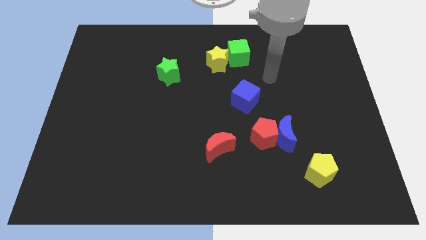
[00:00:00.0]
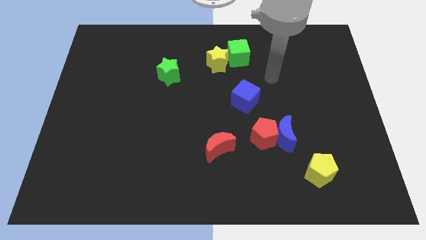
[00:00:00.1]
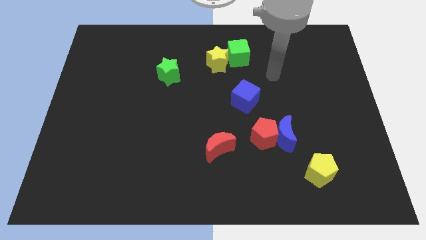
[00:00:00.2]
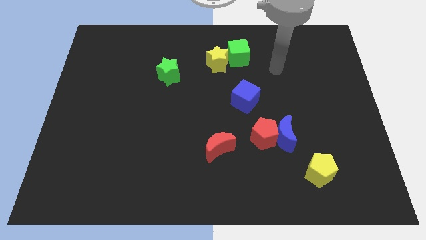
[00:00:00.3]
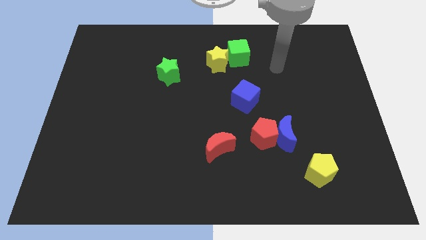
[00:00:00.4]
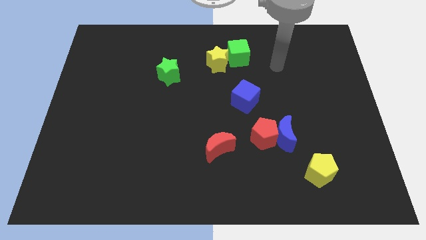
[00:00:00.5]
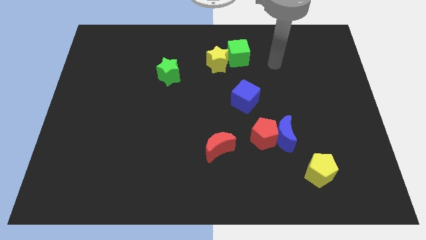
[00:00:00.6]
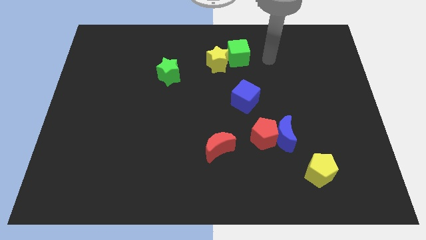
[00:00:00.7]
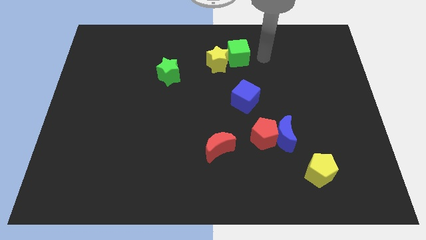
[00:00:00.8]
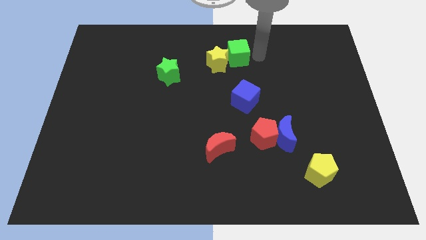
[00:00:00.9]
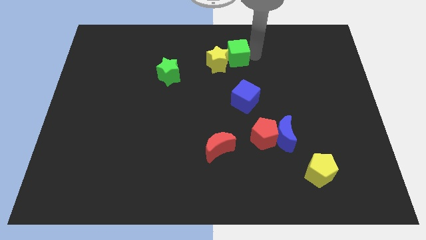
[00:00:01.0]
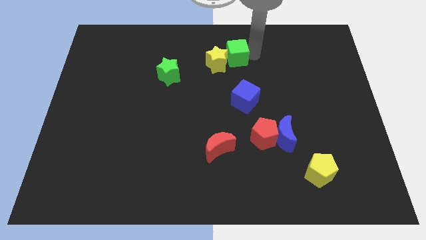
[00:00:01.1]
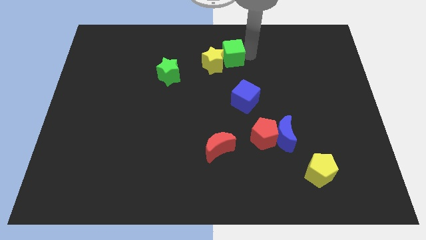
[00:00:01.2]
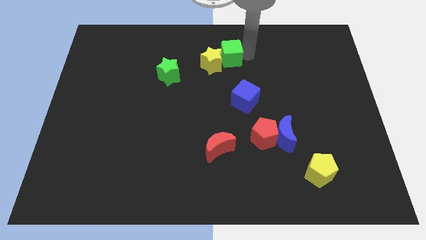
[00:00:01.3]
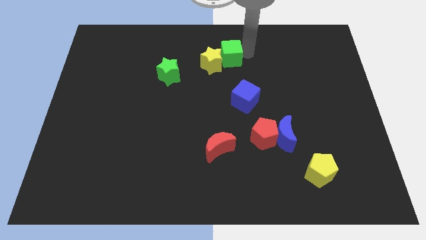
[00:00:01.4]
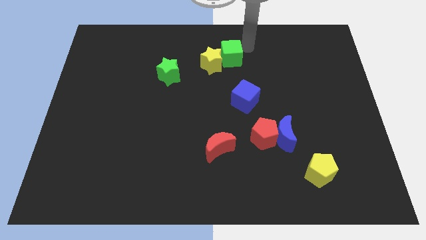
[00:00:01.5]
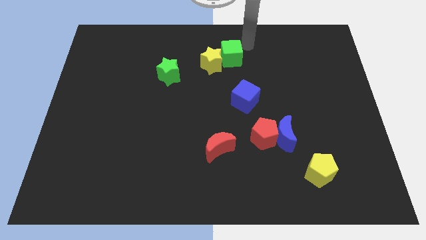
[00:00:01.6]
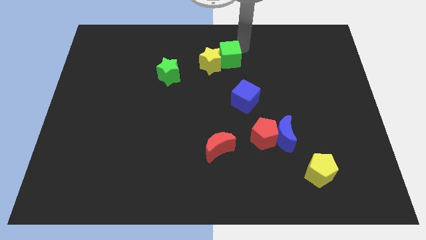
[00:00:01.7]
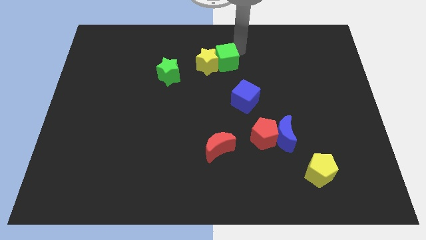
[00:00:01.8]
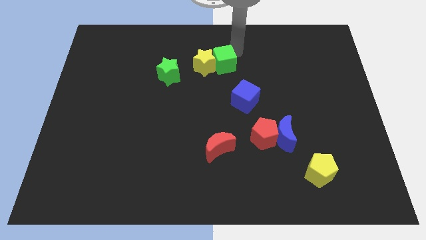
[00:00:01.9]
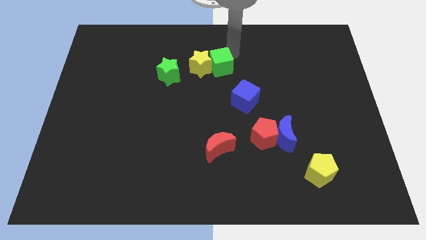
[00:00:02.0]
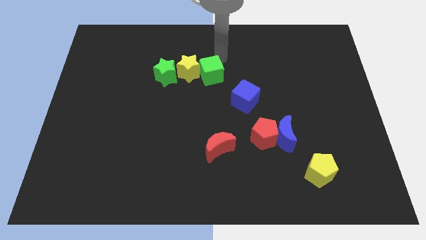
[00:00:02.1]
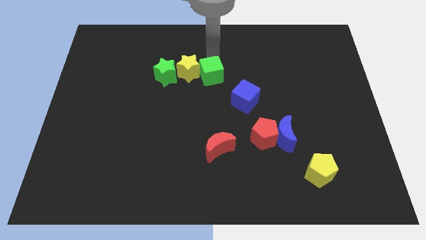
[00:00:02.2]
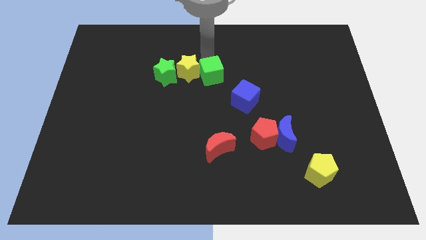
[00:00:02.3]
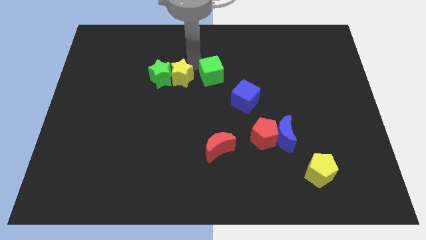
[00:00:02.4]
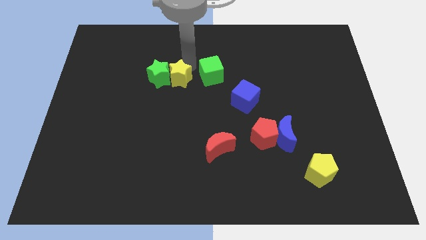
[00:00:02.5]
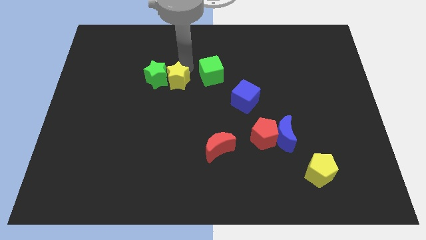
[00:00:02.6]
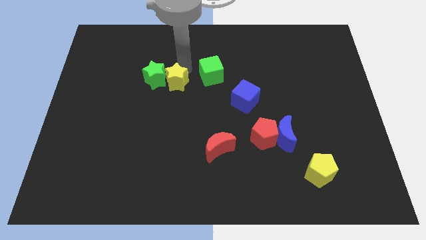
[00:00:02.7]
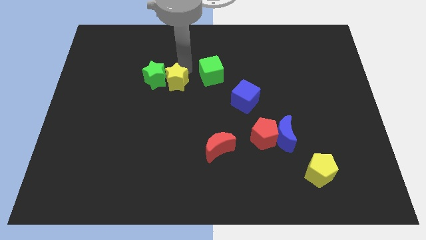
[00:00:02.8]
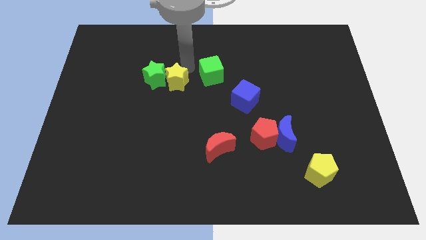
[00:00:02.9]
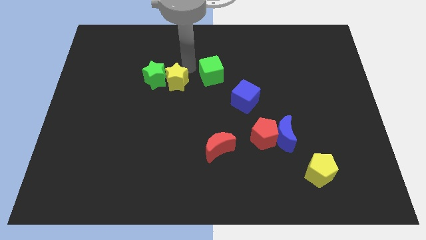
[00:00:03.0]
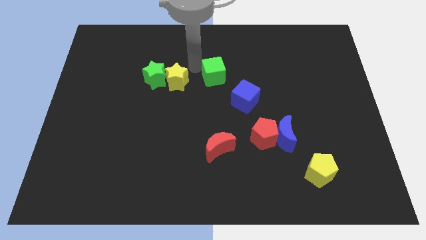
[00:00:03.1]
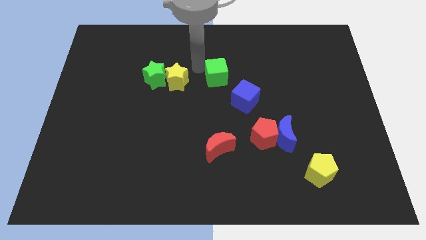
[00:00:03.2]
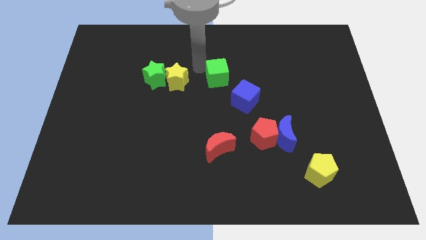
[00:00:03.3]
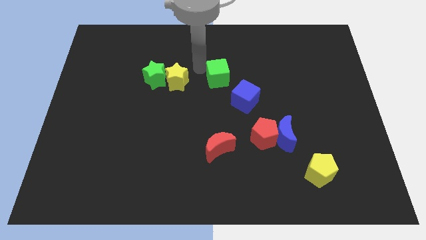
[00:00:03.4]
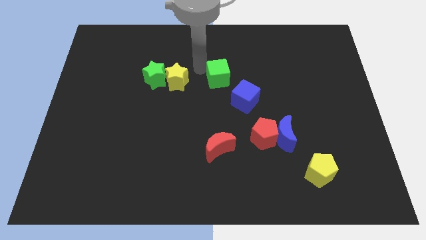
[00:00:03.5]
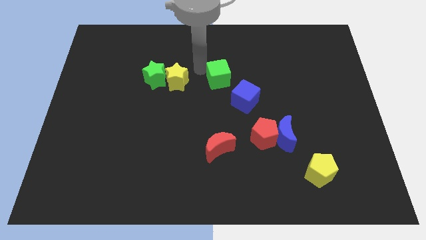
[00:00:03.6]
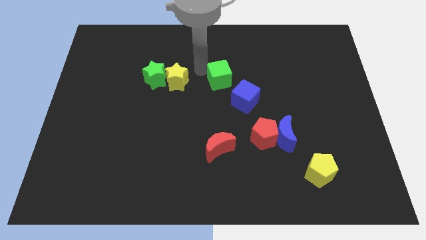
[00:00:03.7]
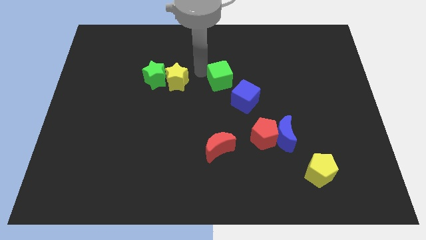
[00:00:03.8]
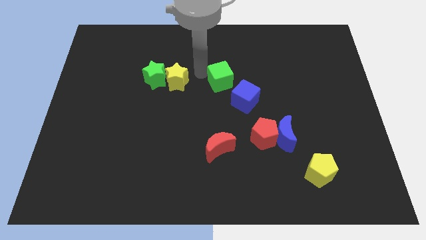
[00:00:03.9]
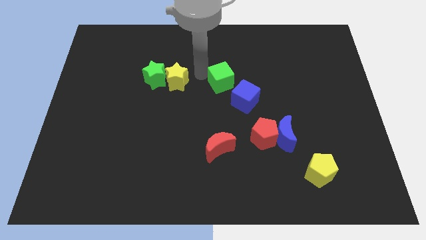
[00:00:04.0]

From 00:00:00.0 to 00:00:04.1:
move the green cube to the top left of blue cube

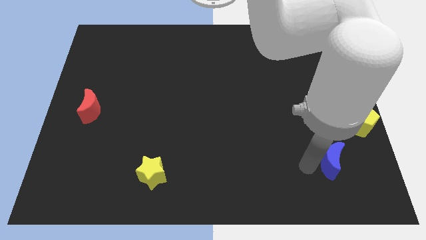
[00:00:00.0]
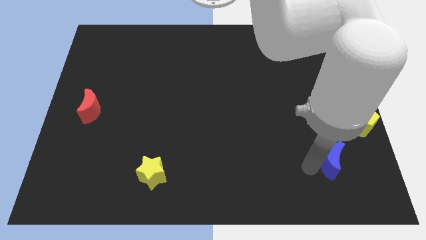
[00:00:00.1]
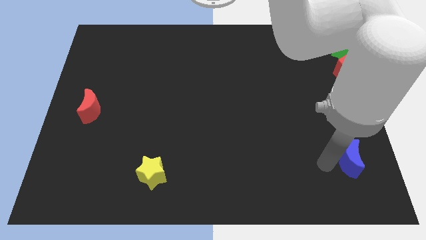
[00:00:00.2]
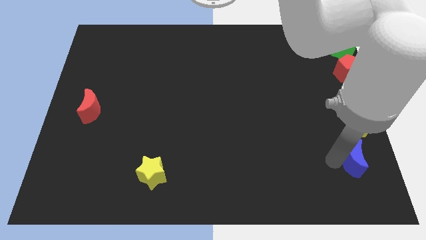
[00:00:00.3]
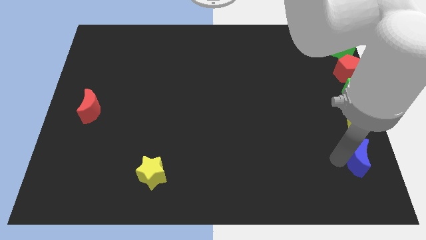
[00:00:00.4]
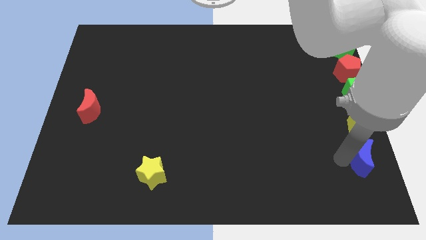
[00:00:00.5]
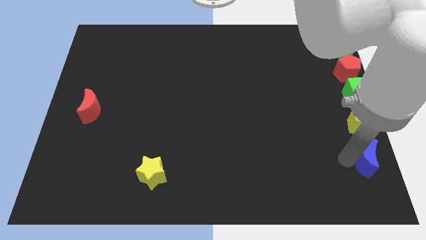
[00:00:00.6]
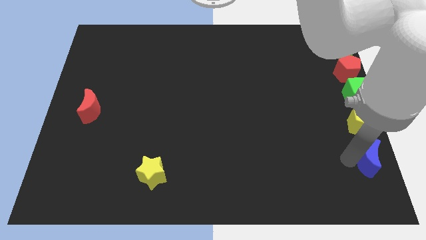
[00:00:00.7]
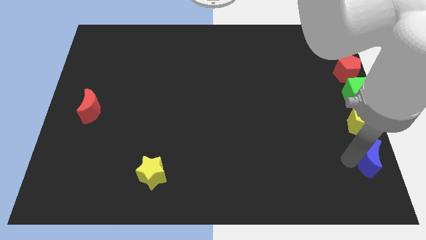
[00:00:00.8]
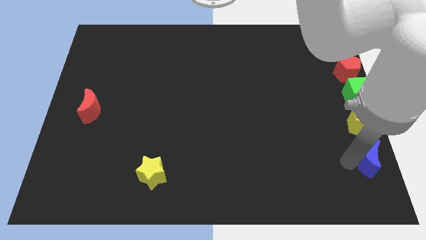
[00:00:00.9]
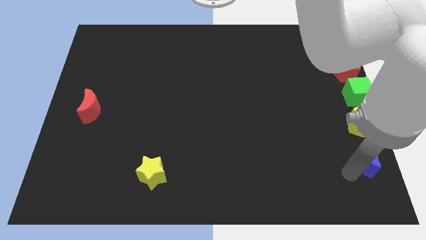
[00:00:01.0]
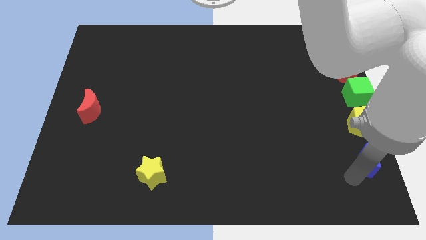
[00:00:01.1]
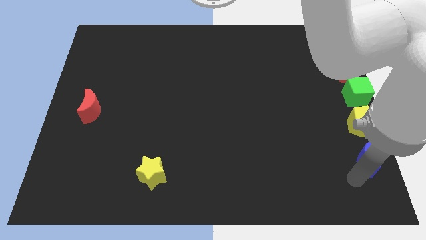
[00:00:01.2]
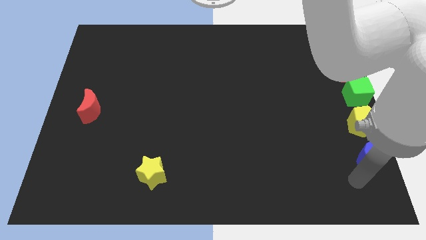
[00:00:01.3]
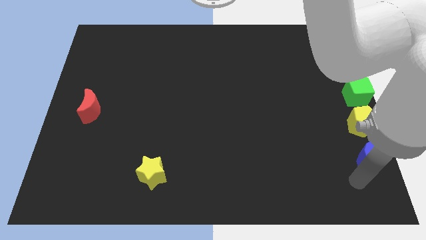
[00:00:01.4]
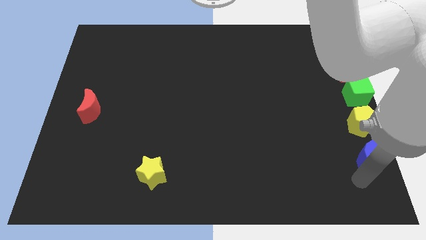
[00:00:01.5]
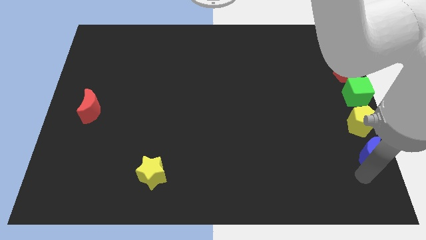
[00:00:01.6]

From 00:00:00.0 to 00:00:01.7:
move the blue moon to the bottom of the yellow pentagon

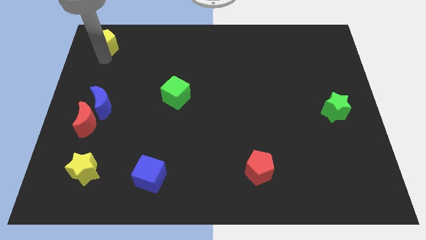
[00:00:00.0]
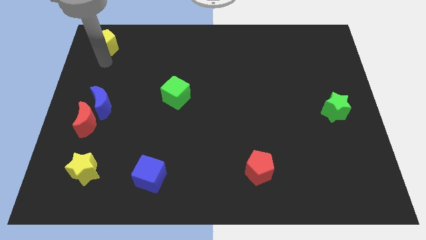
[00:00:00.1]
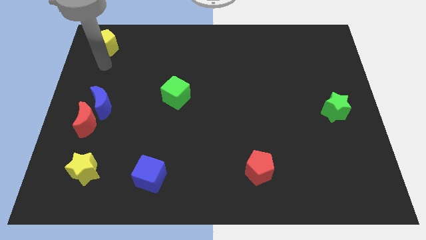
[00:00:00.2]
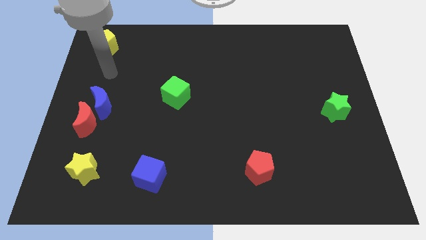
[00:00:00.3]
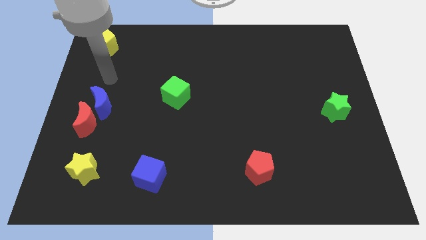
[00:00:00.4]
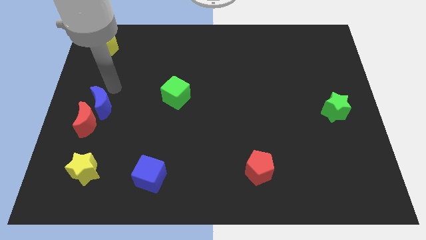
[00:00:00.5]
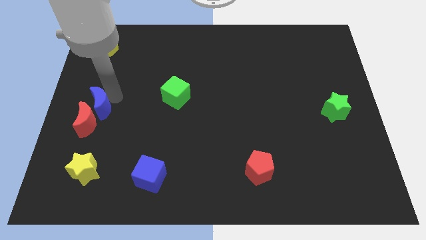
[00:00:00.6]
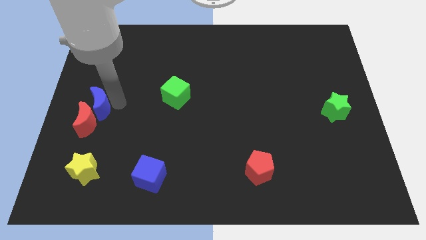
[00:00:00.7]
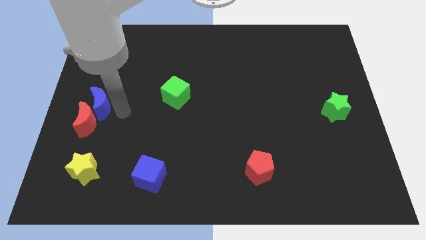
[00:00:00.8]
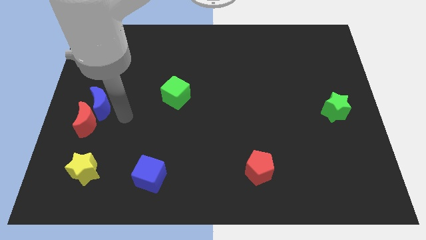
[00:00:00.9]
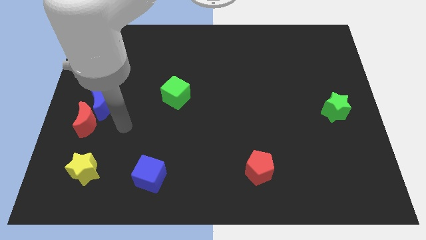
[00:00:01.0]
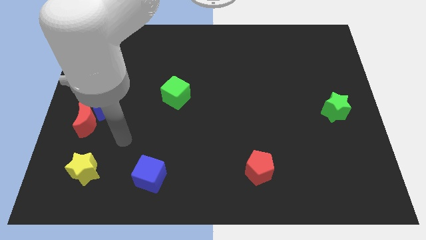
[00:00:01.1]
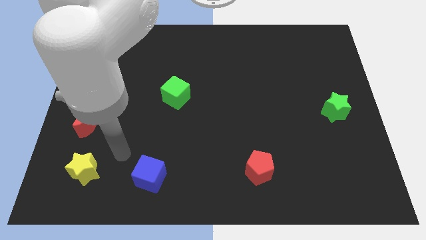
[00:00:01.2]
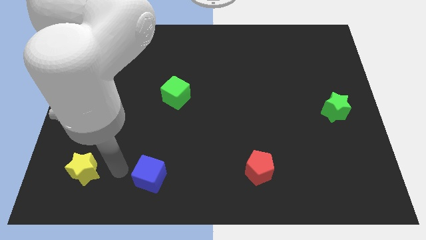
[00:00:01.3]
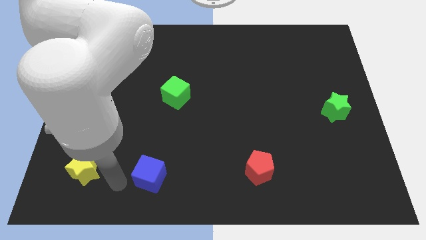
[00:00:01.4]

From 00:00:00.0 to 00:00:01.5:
place your arm between the yellow star and blue cube

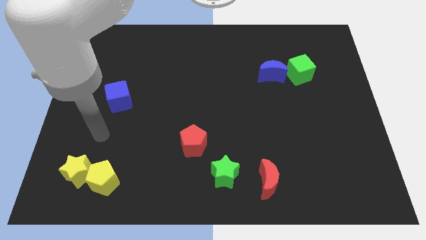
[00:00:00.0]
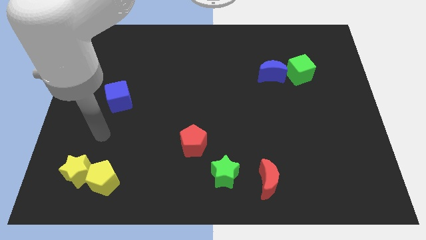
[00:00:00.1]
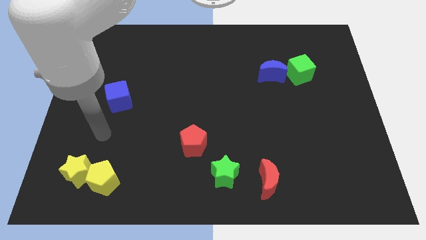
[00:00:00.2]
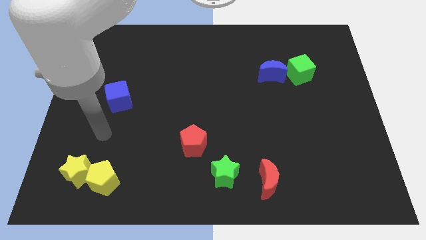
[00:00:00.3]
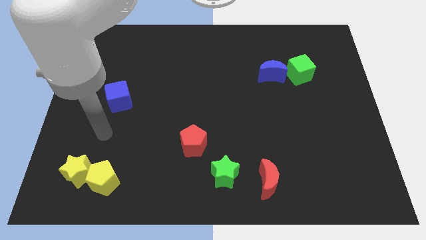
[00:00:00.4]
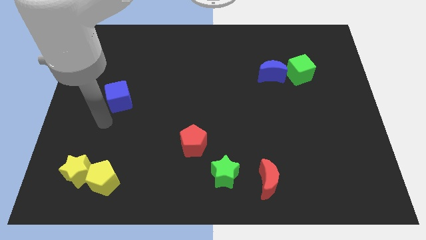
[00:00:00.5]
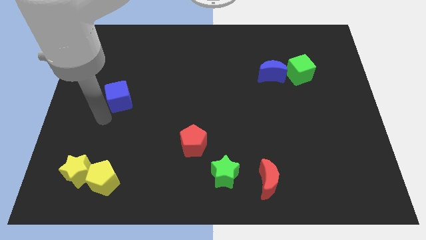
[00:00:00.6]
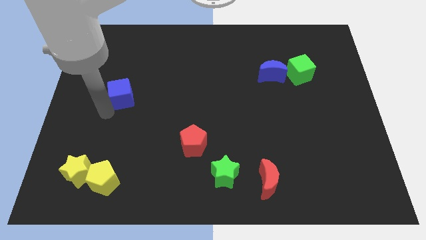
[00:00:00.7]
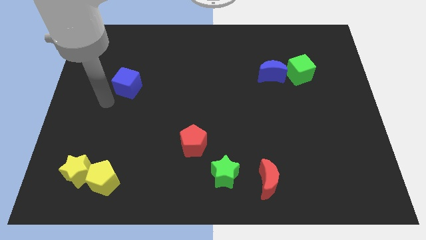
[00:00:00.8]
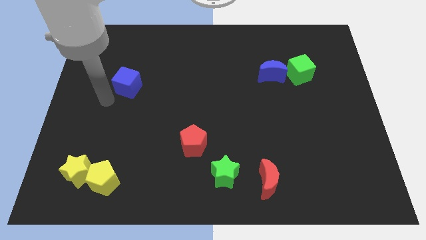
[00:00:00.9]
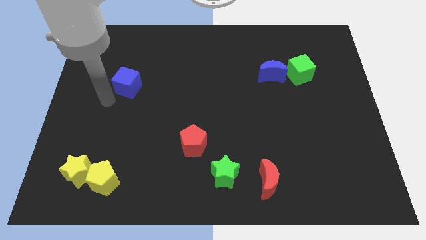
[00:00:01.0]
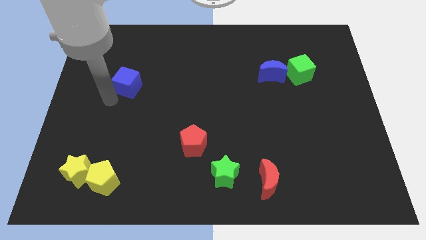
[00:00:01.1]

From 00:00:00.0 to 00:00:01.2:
move your arm towards the blue cube

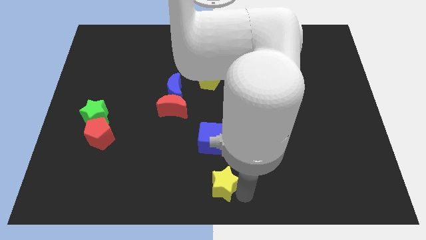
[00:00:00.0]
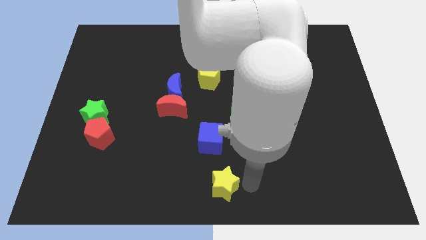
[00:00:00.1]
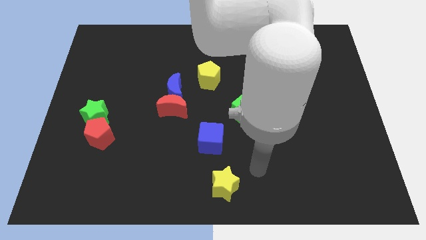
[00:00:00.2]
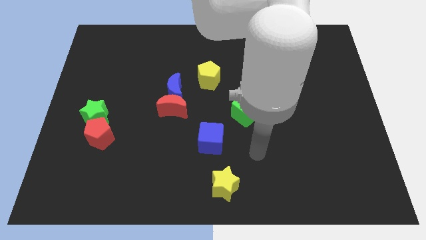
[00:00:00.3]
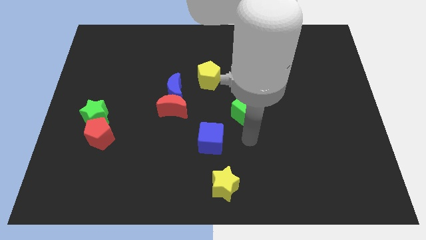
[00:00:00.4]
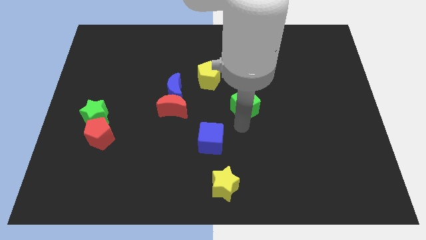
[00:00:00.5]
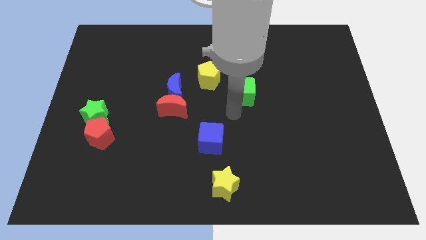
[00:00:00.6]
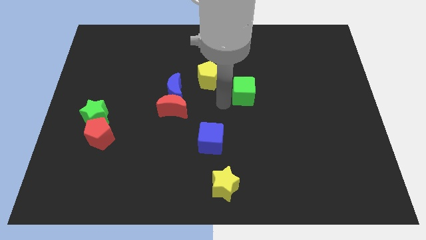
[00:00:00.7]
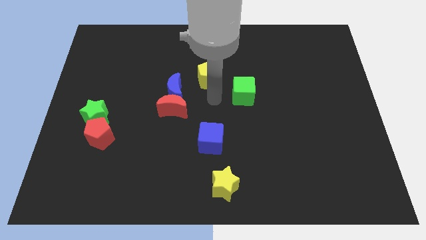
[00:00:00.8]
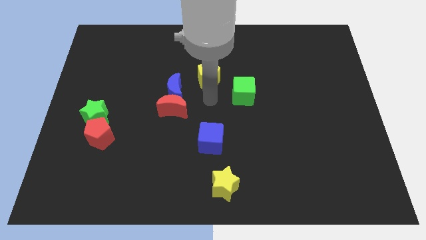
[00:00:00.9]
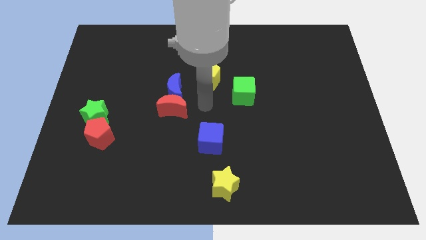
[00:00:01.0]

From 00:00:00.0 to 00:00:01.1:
touch the green cube
